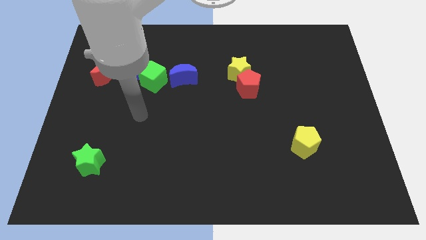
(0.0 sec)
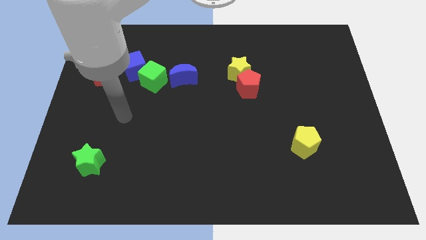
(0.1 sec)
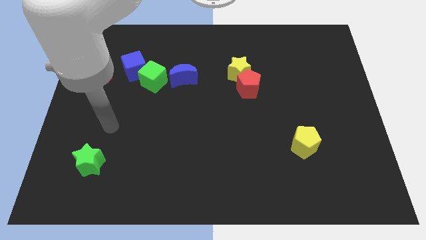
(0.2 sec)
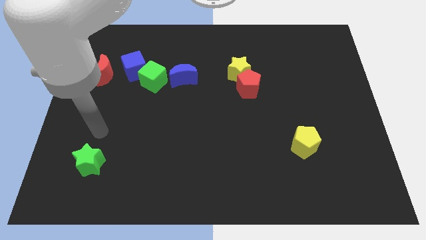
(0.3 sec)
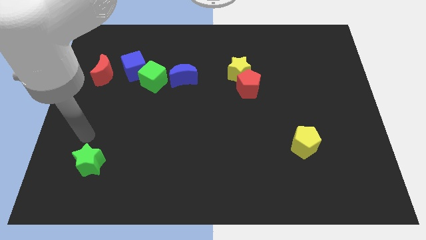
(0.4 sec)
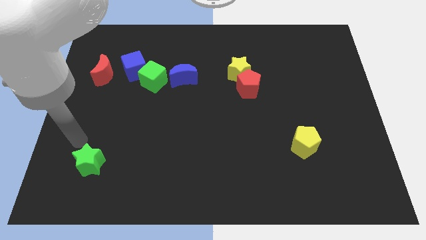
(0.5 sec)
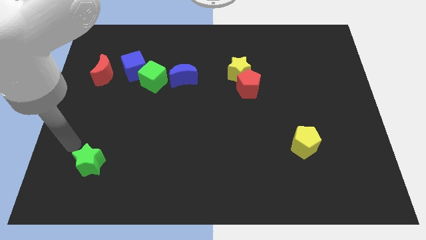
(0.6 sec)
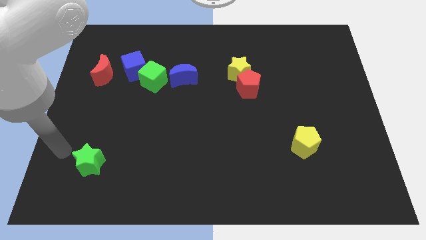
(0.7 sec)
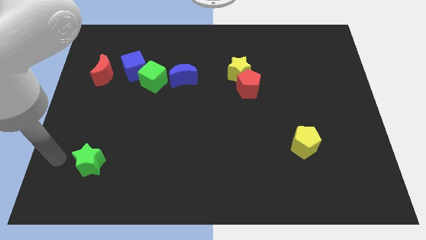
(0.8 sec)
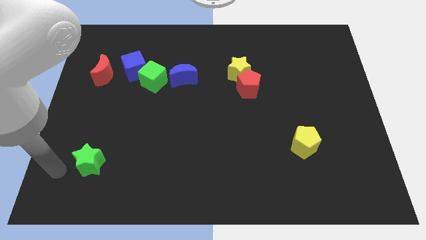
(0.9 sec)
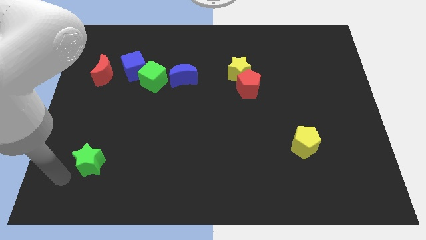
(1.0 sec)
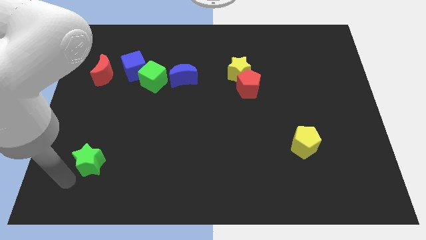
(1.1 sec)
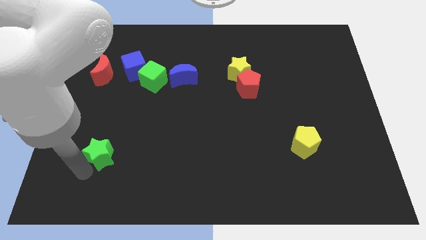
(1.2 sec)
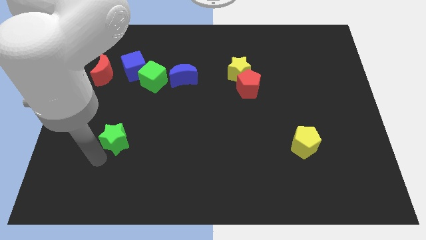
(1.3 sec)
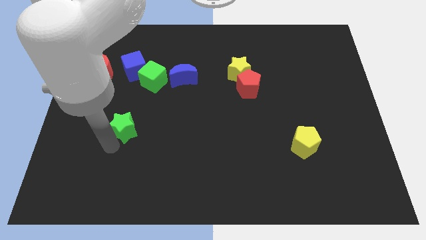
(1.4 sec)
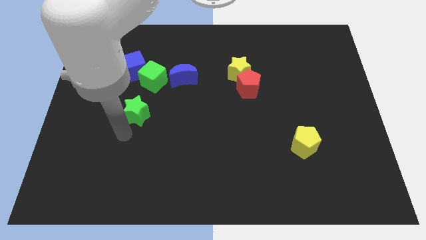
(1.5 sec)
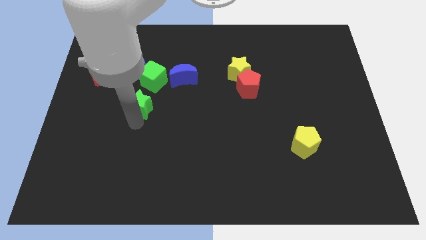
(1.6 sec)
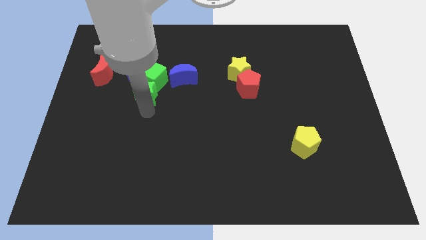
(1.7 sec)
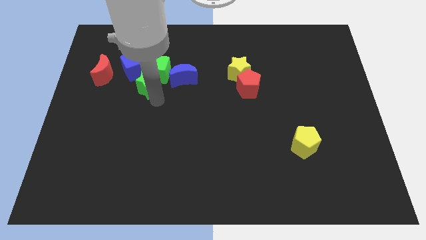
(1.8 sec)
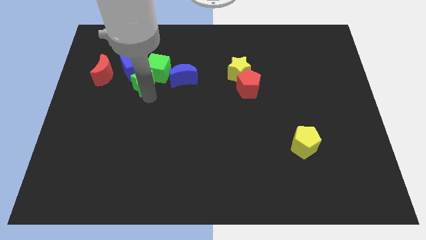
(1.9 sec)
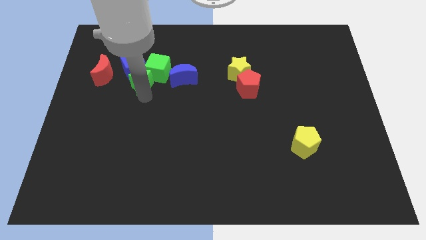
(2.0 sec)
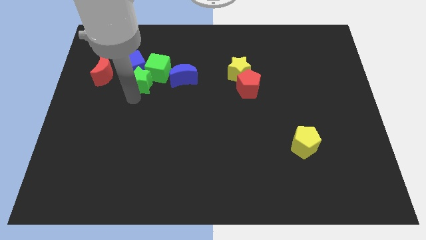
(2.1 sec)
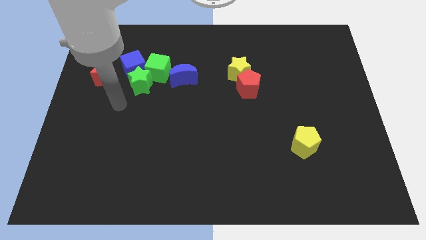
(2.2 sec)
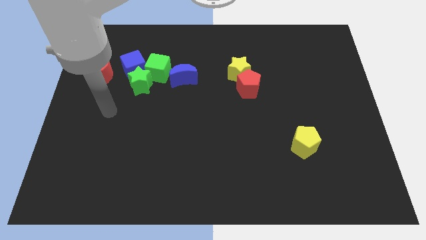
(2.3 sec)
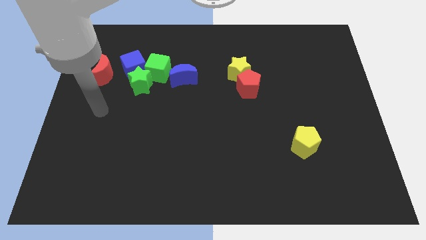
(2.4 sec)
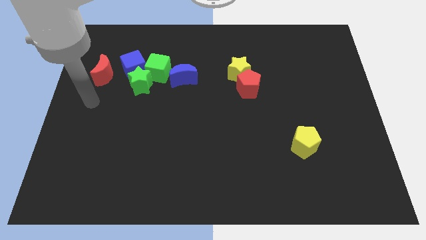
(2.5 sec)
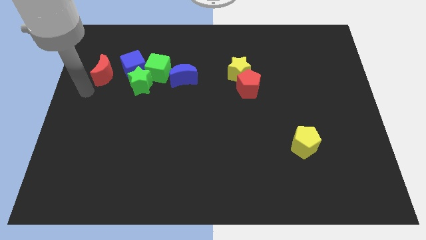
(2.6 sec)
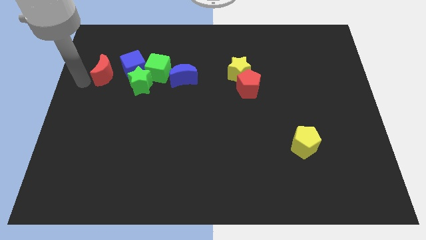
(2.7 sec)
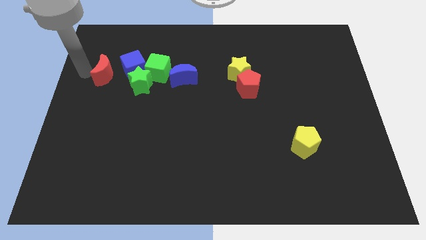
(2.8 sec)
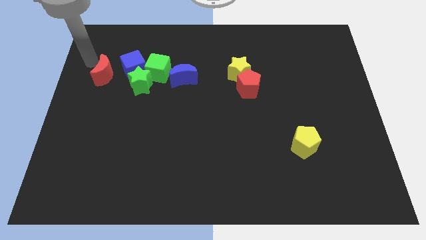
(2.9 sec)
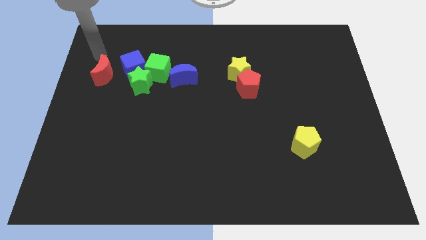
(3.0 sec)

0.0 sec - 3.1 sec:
drag the green star towards the green cube

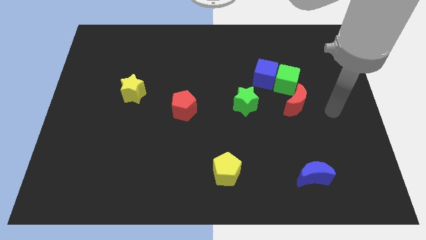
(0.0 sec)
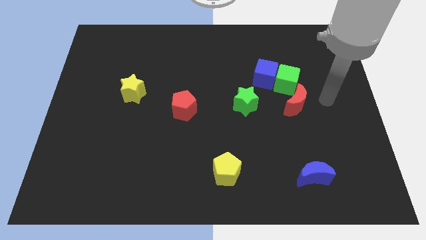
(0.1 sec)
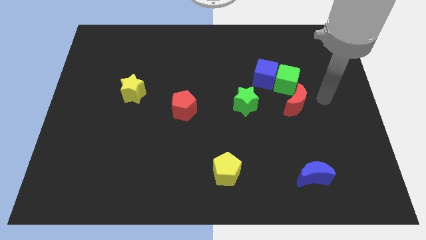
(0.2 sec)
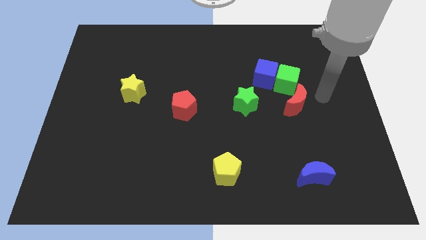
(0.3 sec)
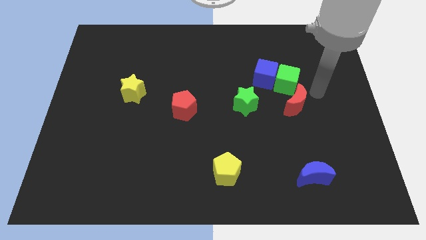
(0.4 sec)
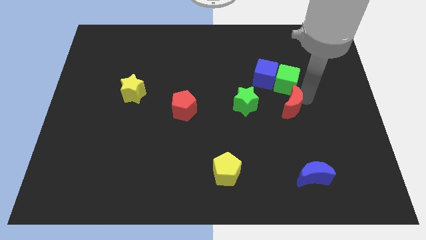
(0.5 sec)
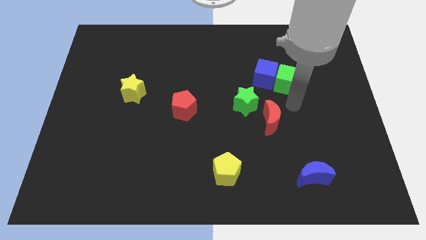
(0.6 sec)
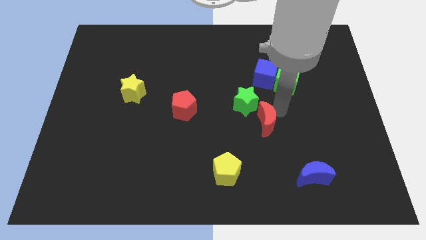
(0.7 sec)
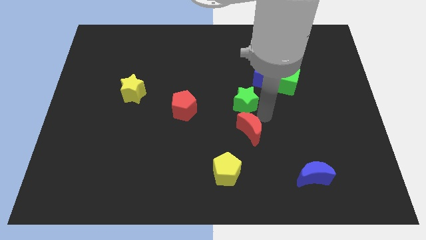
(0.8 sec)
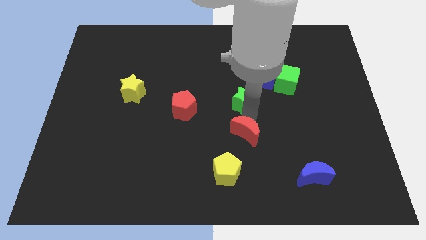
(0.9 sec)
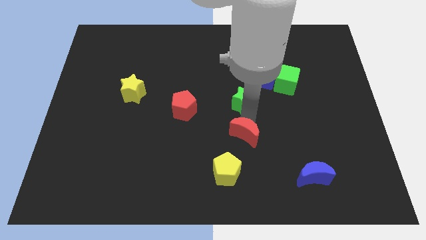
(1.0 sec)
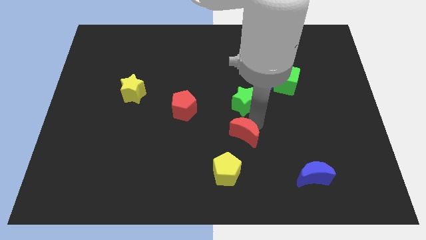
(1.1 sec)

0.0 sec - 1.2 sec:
place red crescent in between the green star and the yellow pentagon

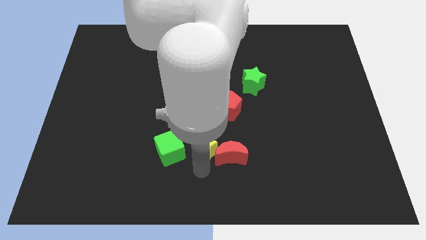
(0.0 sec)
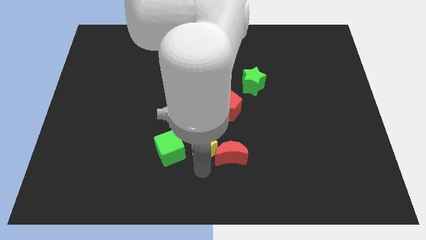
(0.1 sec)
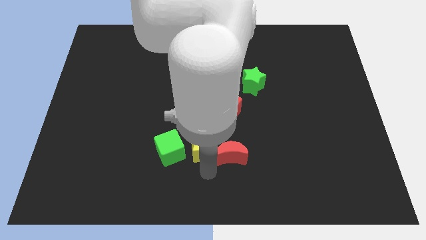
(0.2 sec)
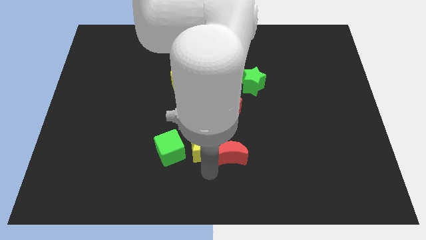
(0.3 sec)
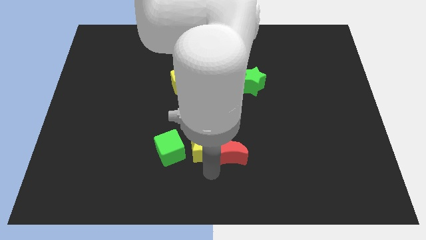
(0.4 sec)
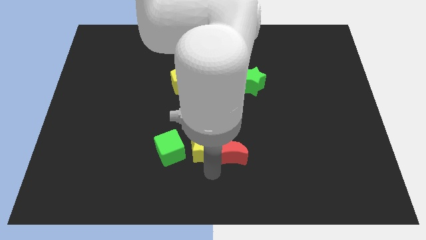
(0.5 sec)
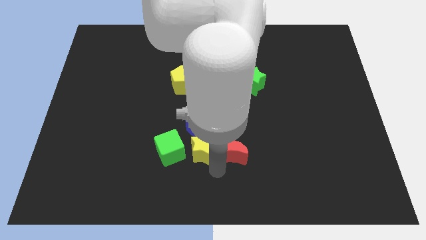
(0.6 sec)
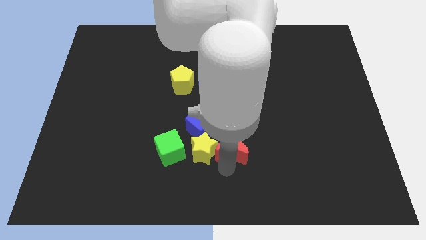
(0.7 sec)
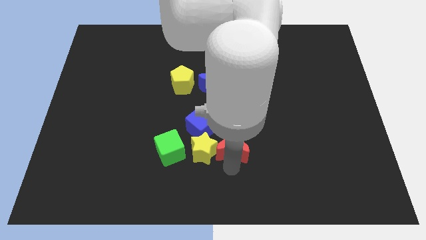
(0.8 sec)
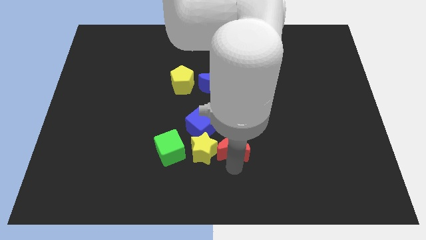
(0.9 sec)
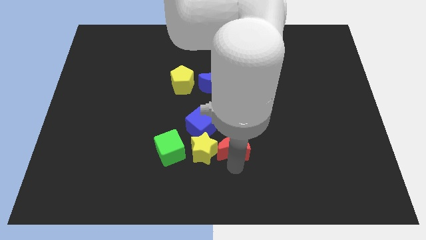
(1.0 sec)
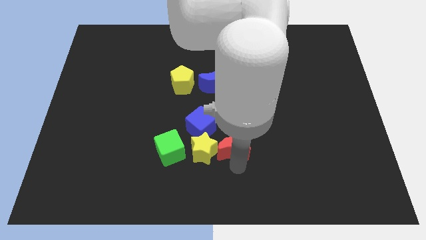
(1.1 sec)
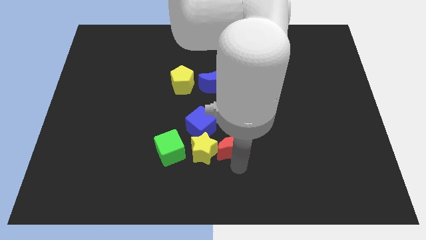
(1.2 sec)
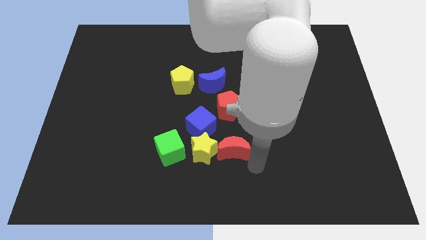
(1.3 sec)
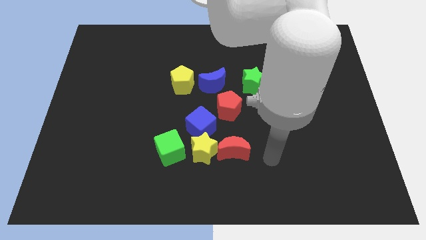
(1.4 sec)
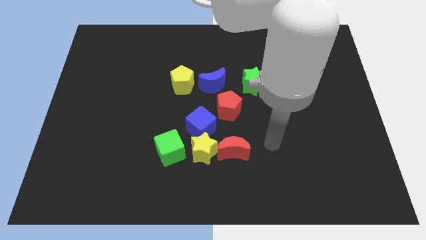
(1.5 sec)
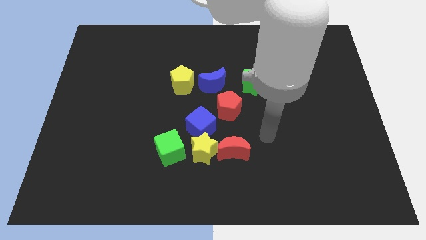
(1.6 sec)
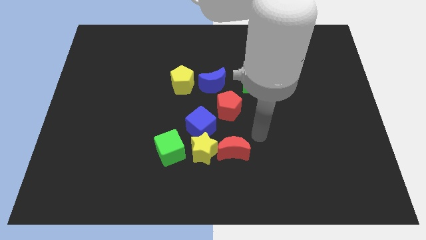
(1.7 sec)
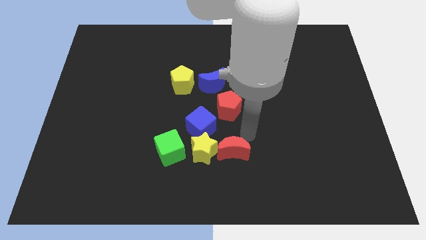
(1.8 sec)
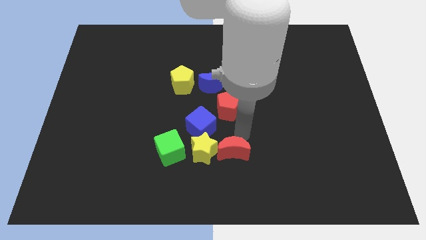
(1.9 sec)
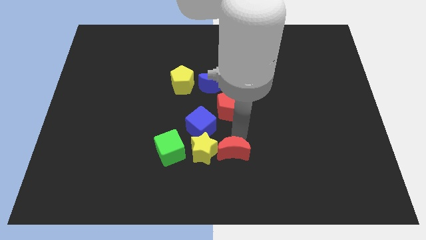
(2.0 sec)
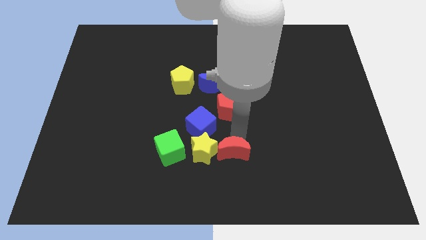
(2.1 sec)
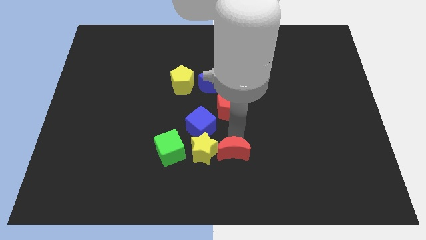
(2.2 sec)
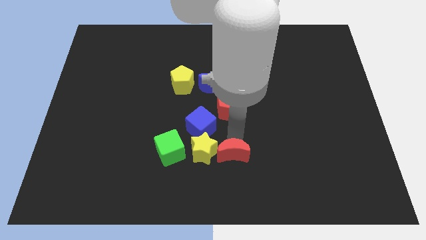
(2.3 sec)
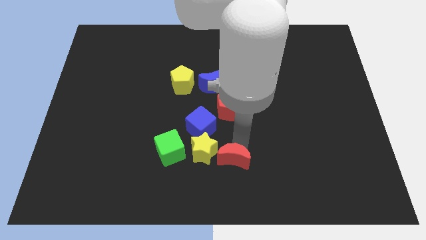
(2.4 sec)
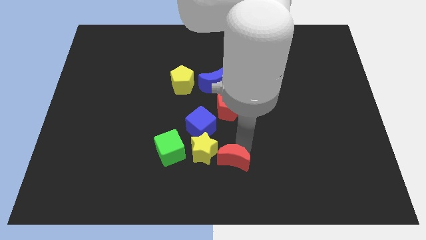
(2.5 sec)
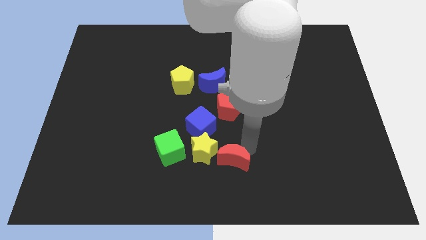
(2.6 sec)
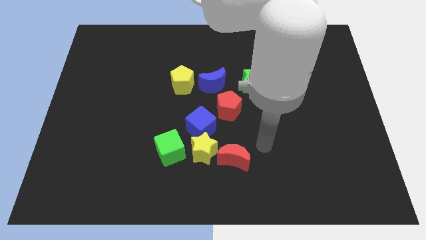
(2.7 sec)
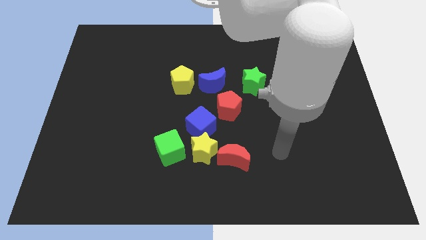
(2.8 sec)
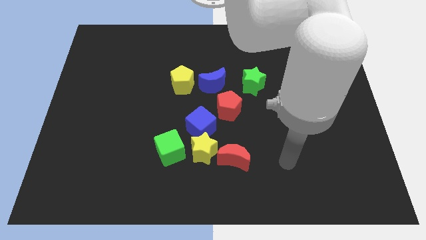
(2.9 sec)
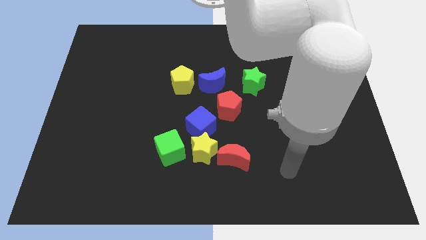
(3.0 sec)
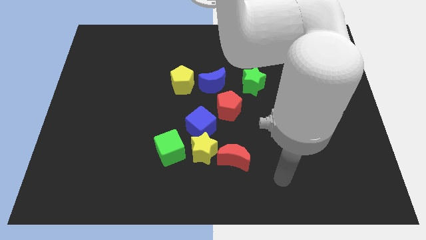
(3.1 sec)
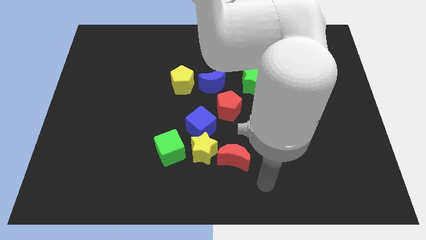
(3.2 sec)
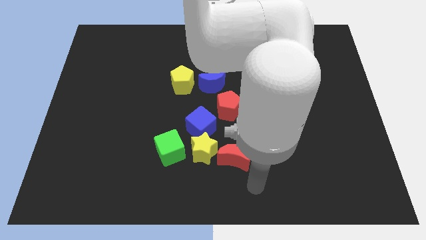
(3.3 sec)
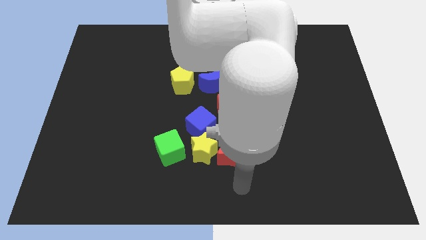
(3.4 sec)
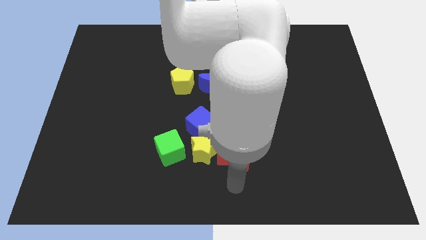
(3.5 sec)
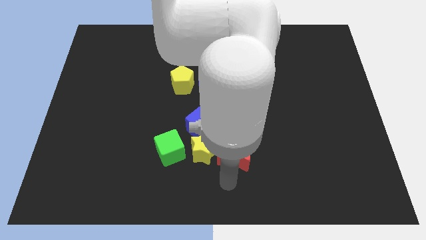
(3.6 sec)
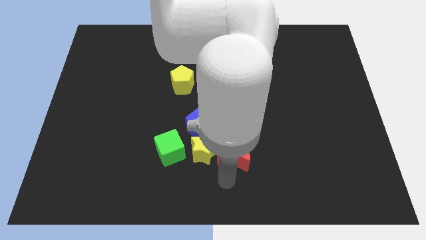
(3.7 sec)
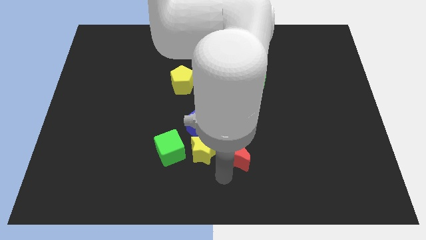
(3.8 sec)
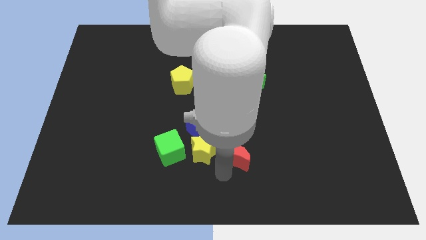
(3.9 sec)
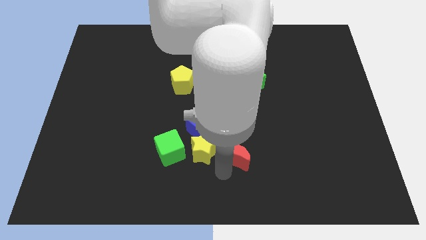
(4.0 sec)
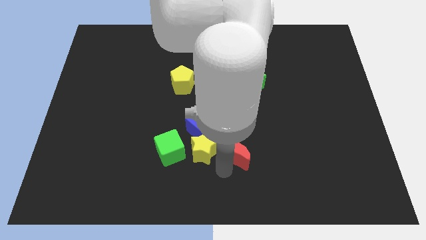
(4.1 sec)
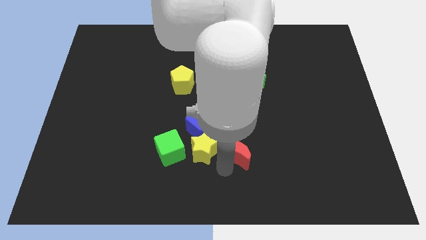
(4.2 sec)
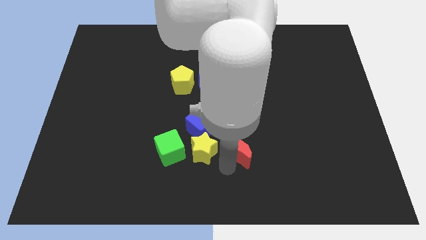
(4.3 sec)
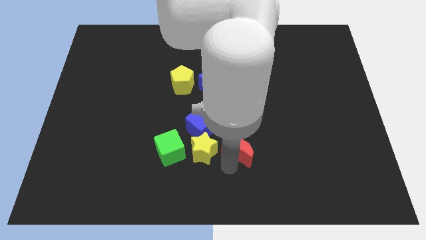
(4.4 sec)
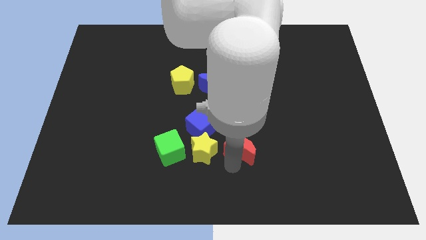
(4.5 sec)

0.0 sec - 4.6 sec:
adjust the red crescent and yellow star at the right side of the green cube
